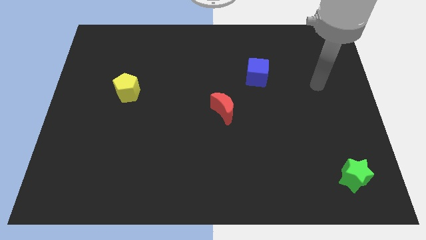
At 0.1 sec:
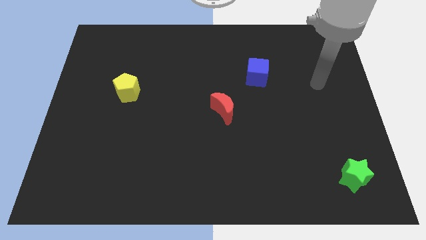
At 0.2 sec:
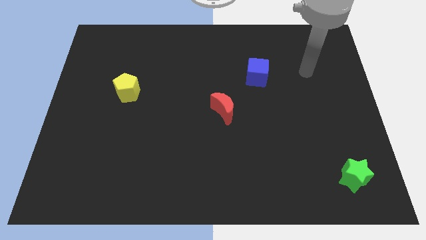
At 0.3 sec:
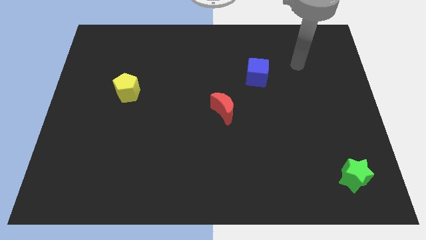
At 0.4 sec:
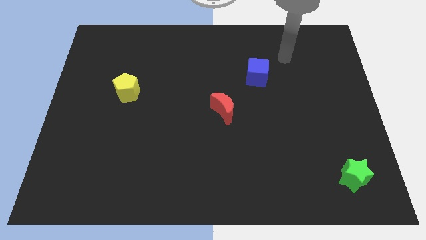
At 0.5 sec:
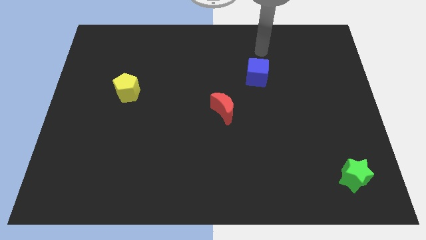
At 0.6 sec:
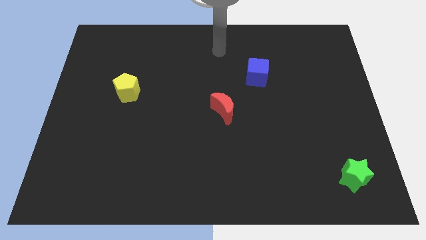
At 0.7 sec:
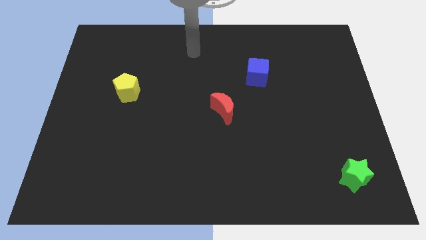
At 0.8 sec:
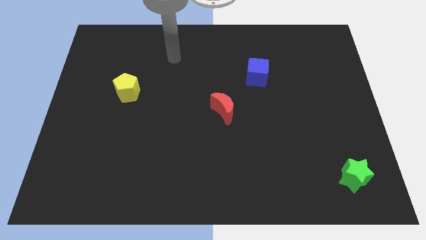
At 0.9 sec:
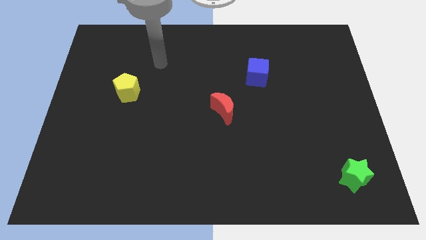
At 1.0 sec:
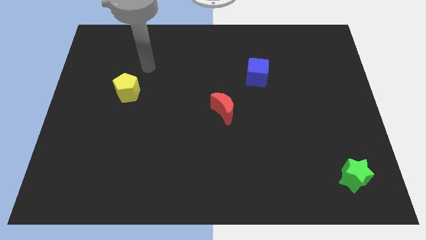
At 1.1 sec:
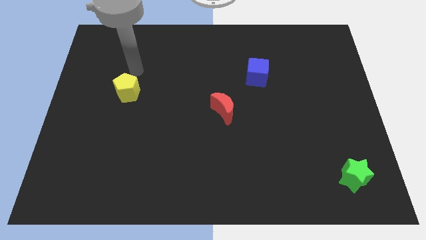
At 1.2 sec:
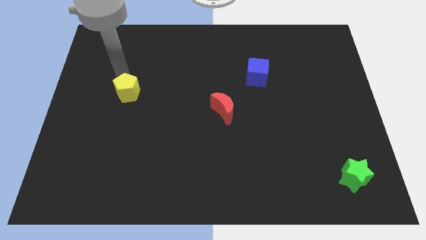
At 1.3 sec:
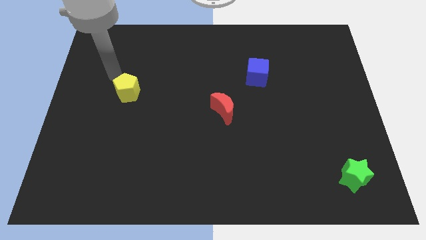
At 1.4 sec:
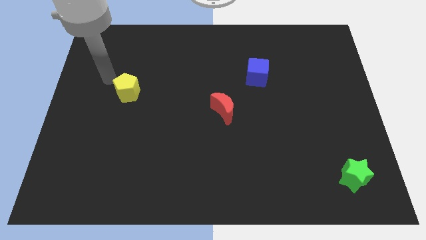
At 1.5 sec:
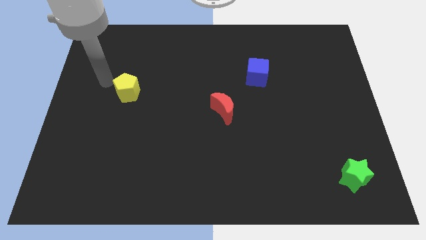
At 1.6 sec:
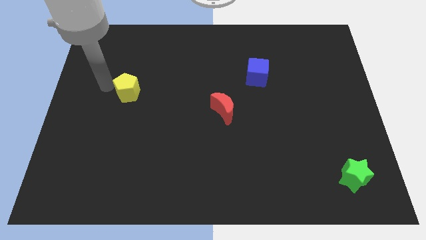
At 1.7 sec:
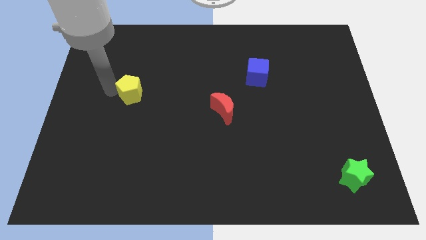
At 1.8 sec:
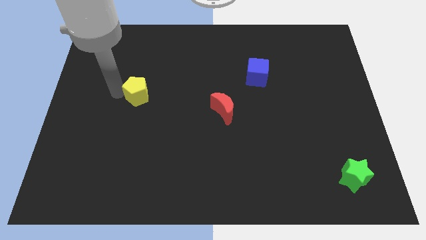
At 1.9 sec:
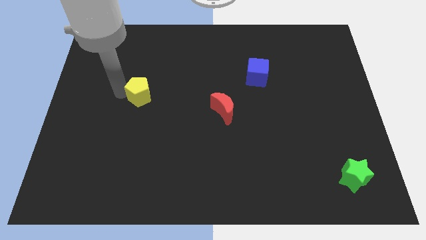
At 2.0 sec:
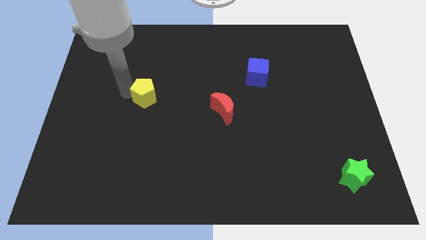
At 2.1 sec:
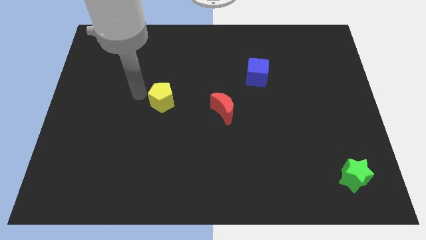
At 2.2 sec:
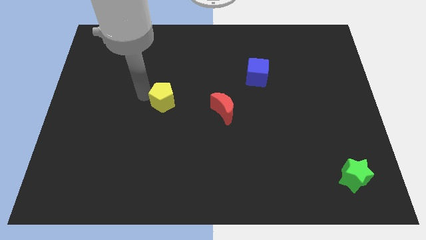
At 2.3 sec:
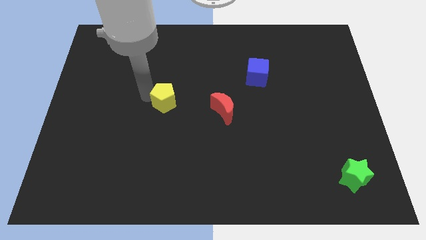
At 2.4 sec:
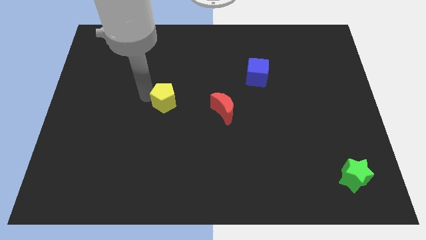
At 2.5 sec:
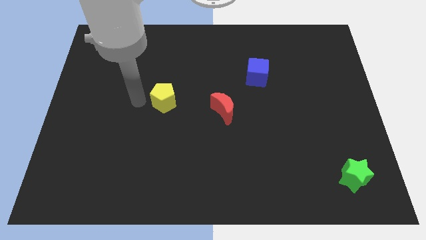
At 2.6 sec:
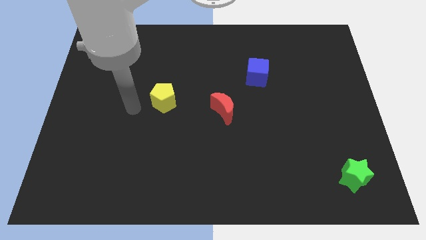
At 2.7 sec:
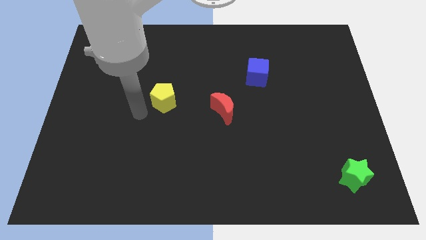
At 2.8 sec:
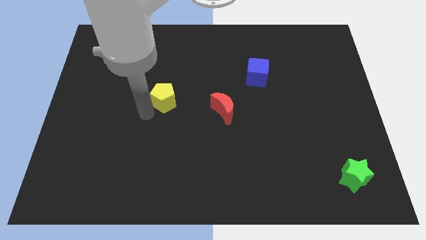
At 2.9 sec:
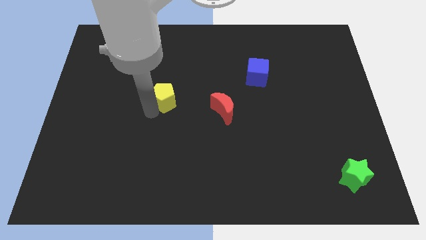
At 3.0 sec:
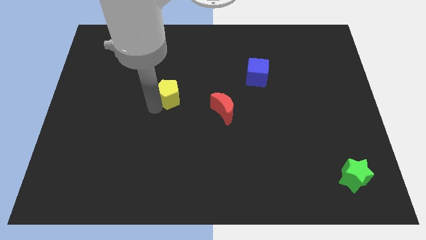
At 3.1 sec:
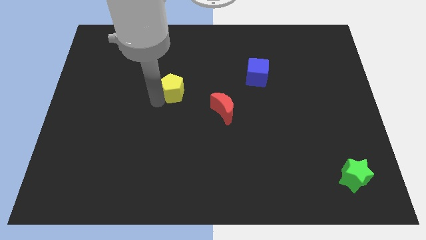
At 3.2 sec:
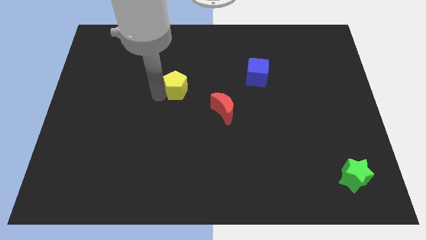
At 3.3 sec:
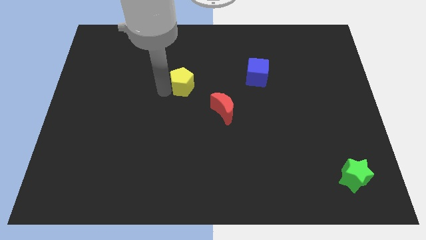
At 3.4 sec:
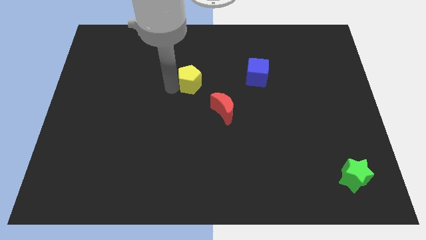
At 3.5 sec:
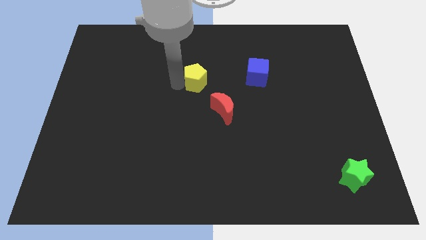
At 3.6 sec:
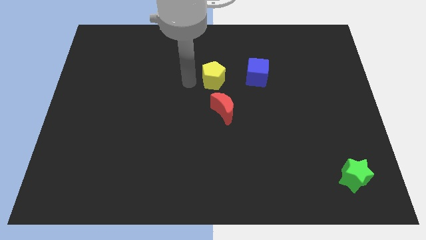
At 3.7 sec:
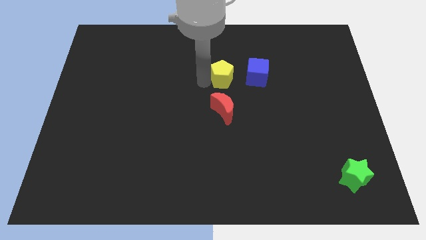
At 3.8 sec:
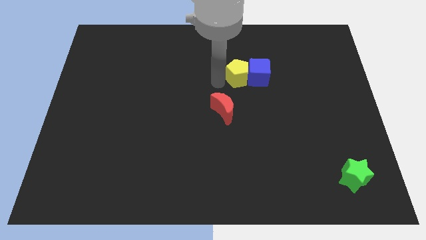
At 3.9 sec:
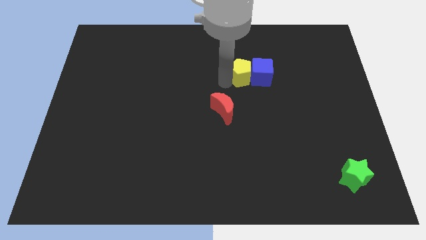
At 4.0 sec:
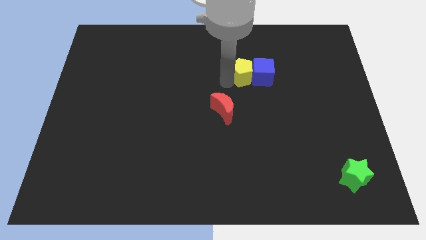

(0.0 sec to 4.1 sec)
move the yellow block towards the blue block

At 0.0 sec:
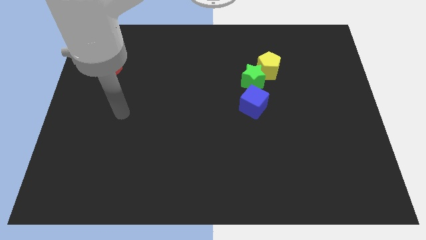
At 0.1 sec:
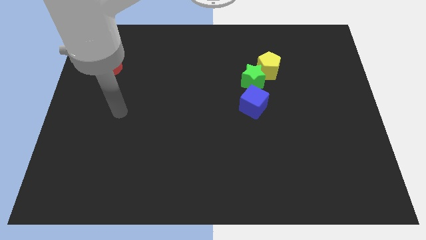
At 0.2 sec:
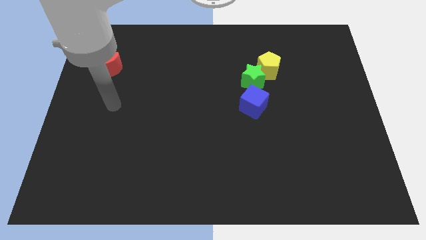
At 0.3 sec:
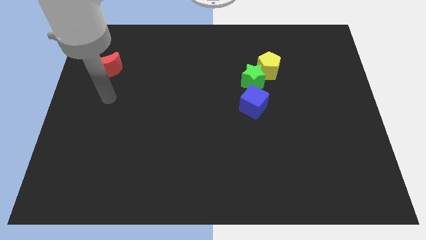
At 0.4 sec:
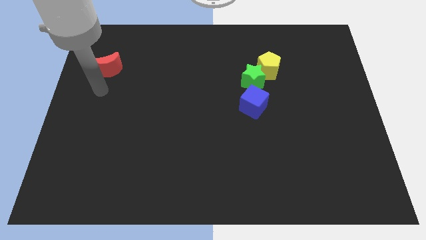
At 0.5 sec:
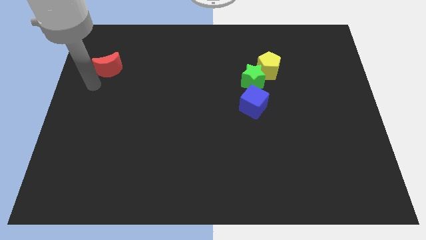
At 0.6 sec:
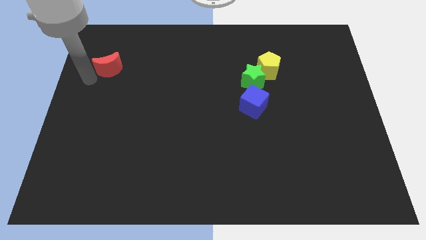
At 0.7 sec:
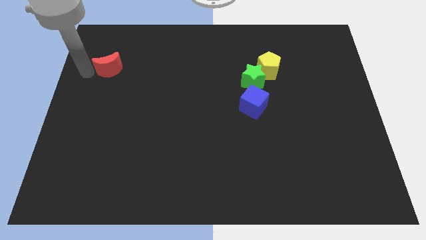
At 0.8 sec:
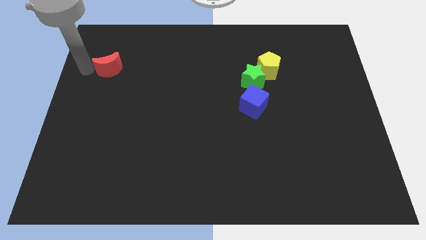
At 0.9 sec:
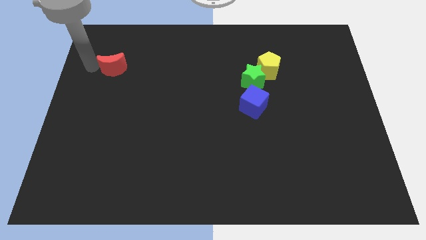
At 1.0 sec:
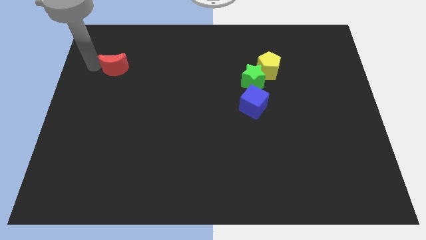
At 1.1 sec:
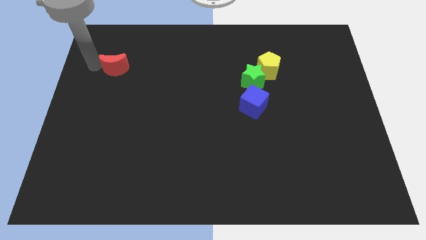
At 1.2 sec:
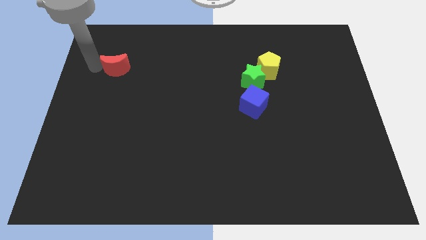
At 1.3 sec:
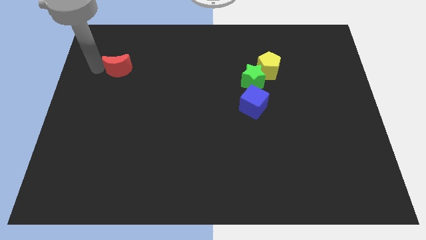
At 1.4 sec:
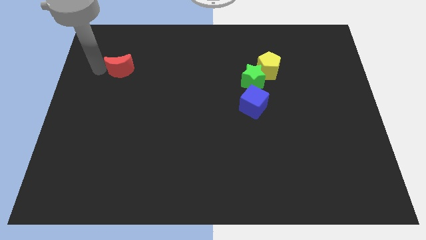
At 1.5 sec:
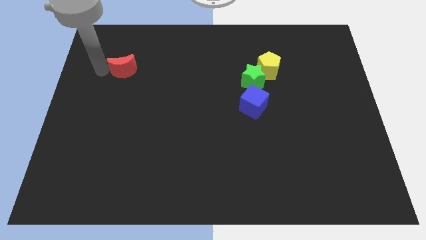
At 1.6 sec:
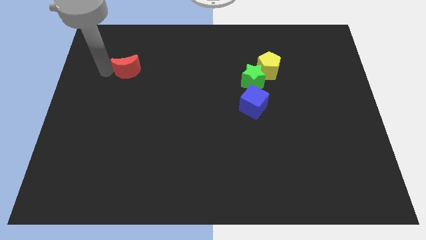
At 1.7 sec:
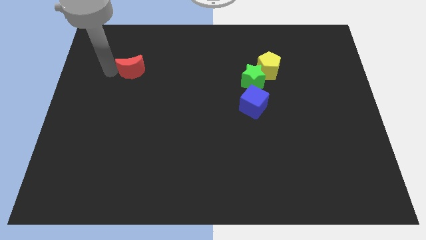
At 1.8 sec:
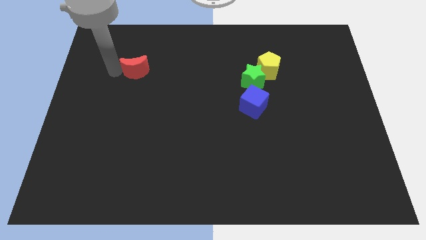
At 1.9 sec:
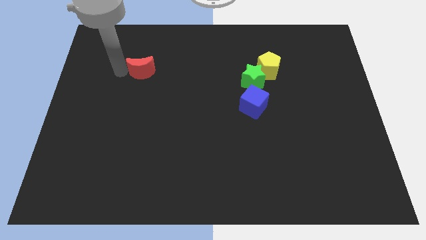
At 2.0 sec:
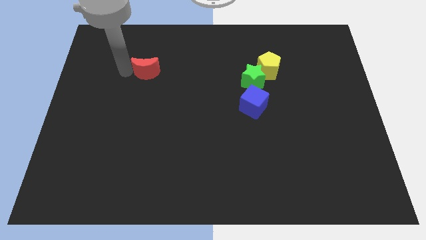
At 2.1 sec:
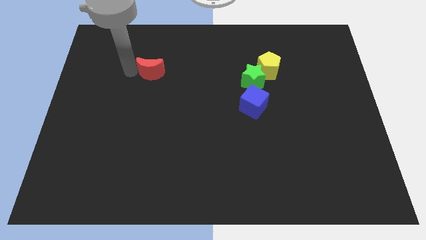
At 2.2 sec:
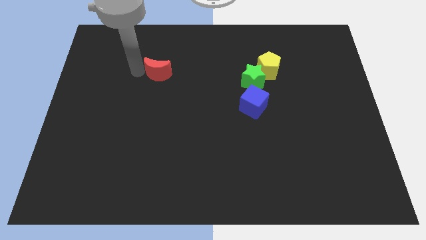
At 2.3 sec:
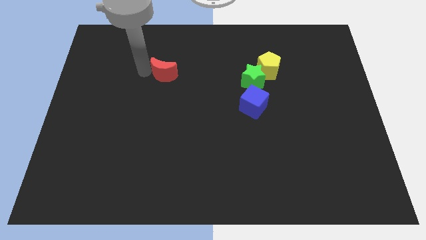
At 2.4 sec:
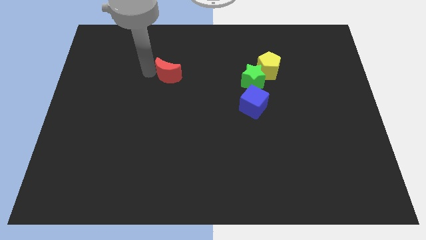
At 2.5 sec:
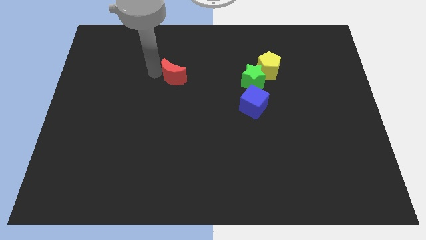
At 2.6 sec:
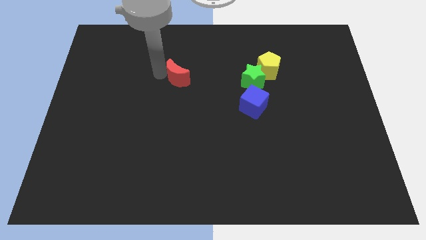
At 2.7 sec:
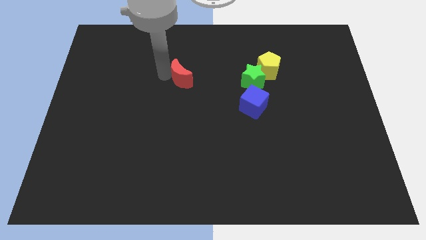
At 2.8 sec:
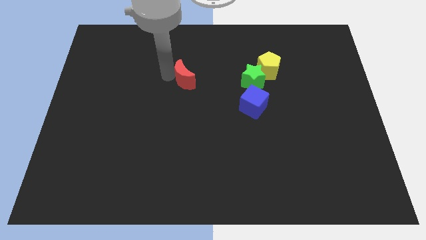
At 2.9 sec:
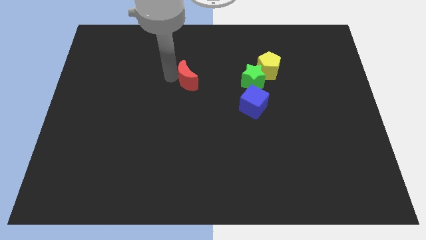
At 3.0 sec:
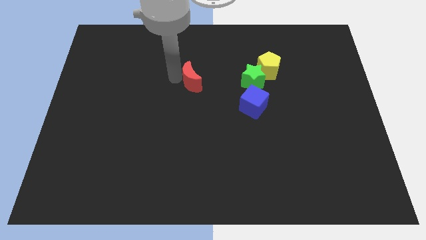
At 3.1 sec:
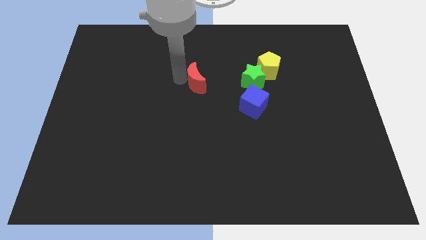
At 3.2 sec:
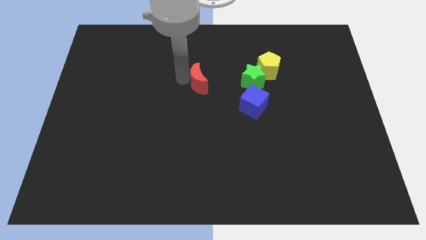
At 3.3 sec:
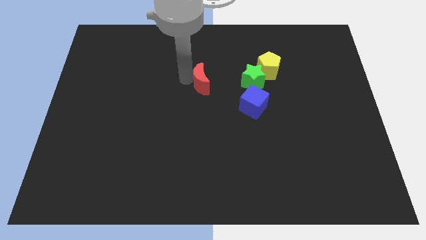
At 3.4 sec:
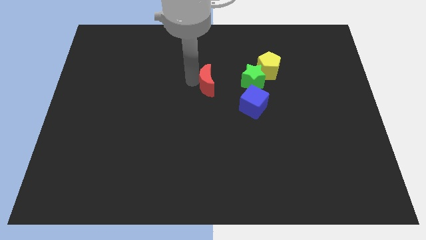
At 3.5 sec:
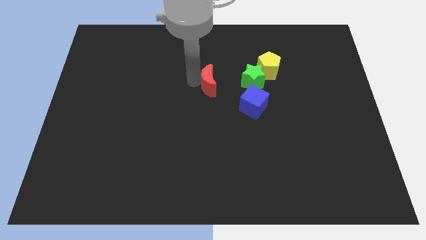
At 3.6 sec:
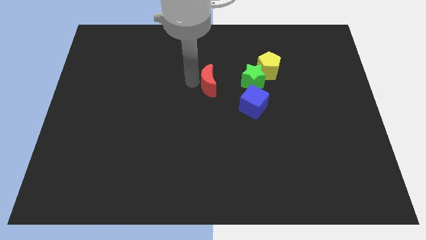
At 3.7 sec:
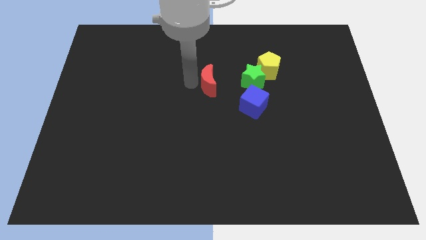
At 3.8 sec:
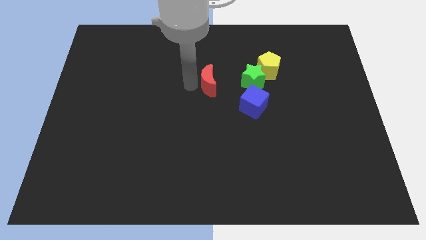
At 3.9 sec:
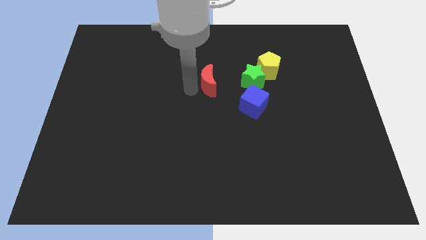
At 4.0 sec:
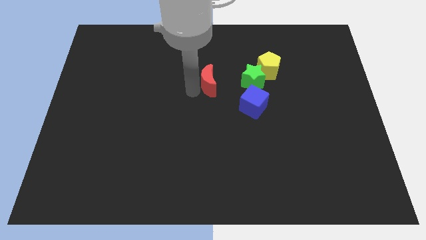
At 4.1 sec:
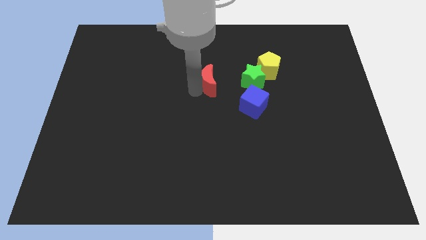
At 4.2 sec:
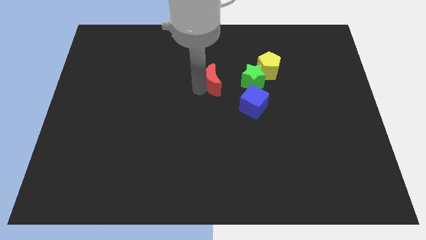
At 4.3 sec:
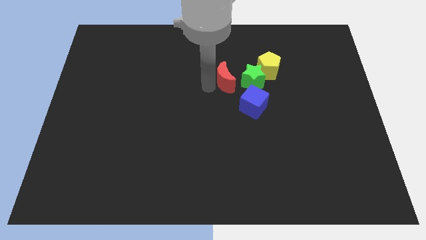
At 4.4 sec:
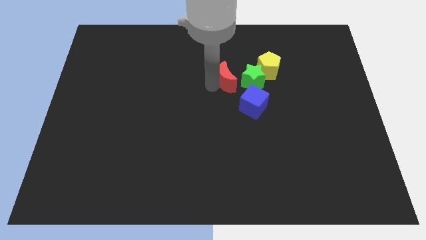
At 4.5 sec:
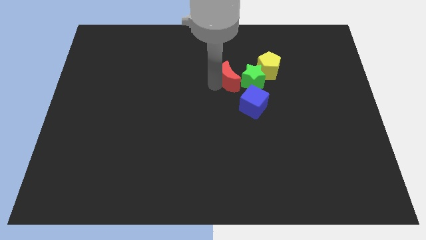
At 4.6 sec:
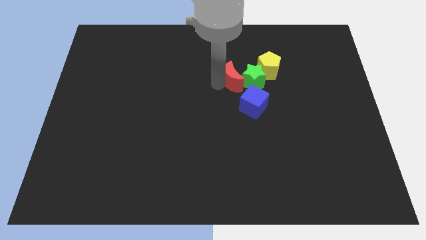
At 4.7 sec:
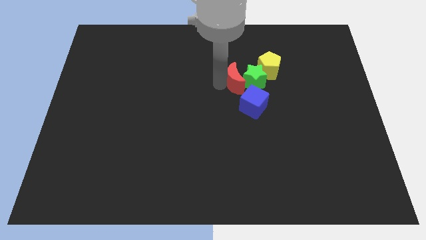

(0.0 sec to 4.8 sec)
push the red block to the green star
